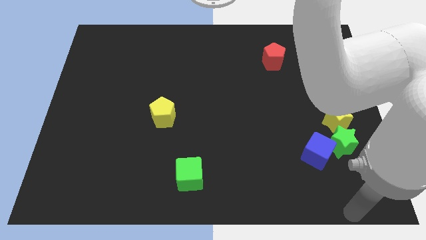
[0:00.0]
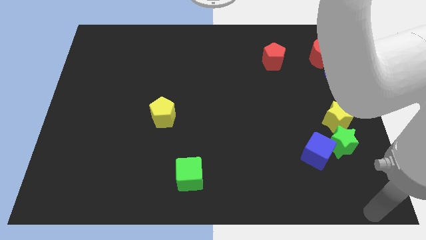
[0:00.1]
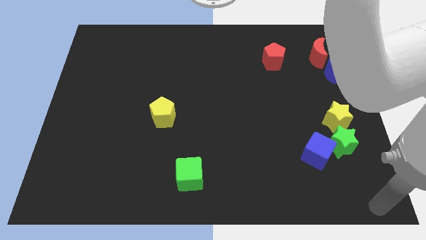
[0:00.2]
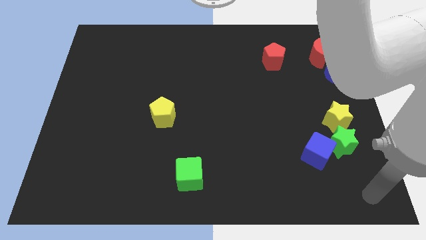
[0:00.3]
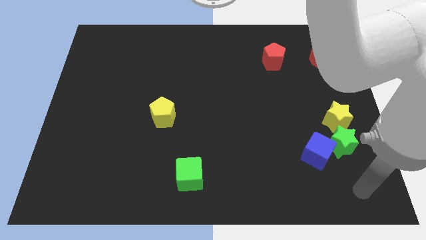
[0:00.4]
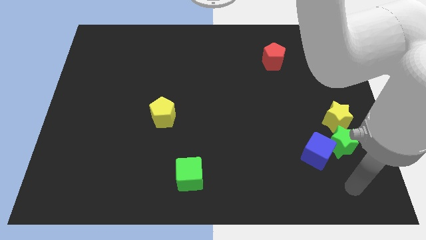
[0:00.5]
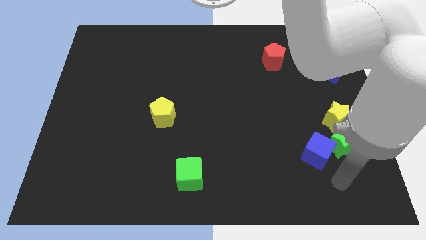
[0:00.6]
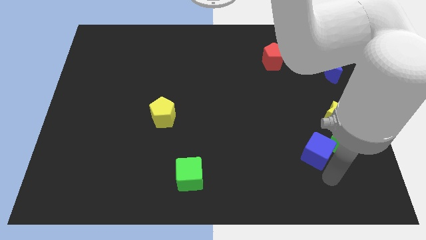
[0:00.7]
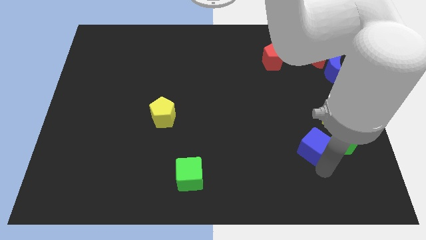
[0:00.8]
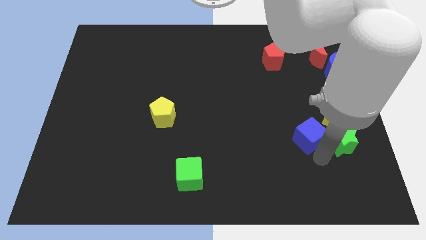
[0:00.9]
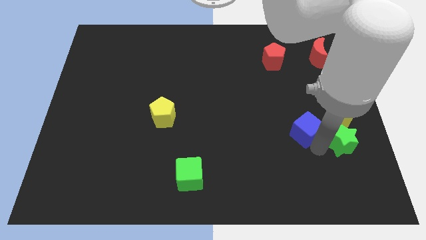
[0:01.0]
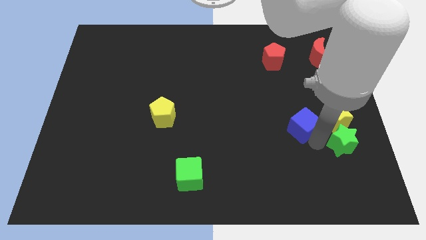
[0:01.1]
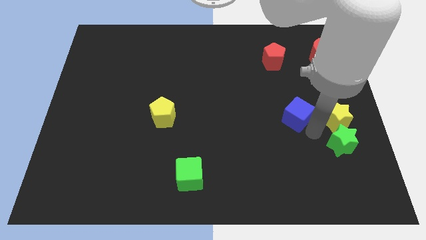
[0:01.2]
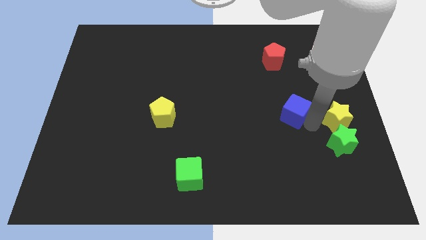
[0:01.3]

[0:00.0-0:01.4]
place the blue cube to the center

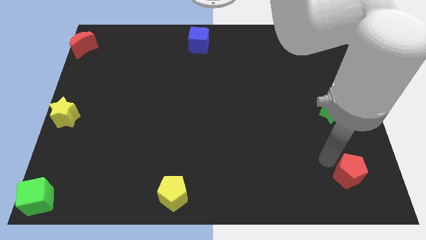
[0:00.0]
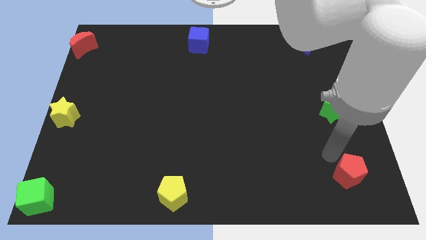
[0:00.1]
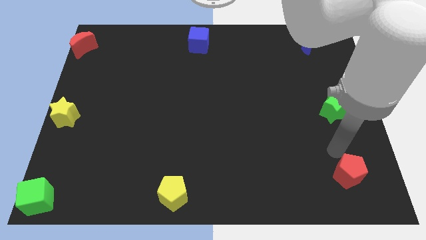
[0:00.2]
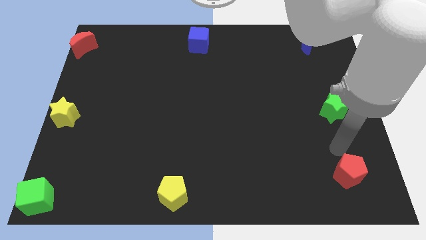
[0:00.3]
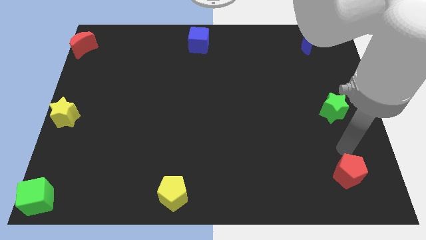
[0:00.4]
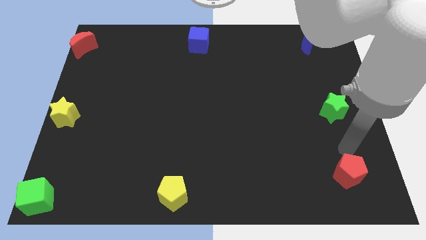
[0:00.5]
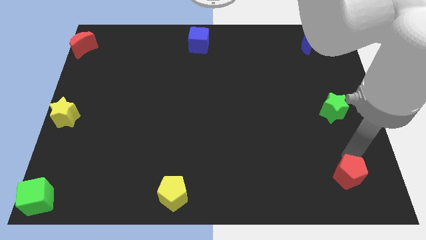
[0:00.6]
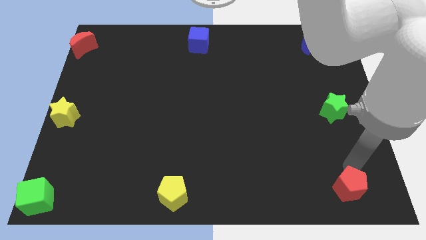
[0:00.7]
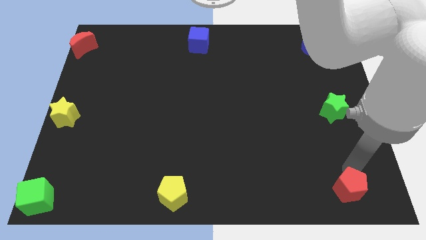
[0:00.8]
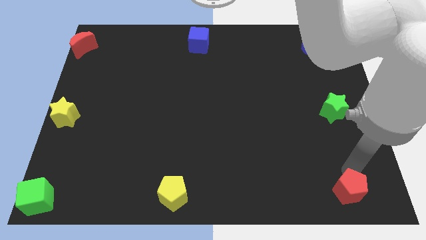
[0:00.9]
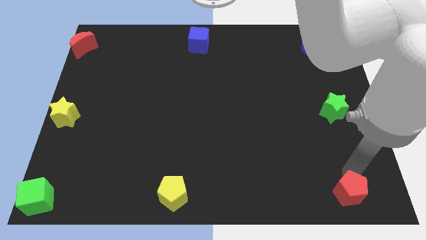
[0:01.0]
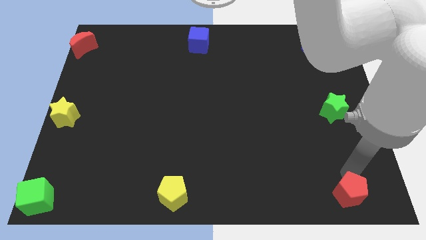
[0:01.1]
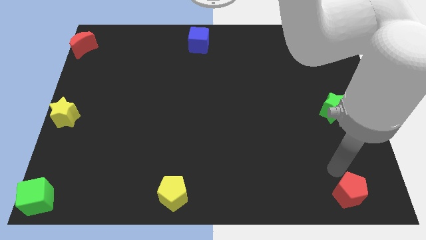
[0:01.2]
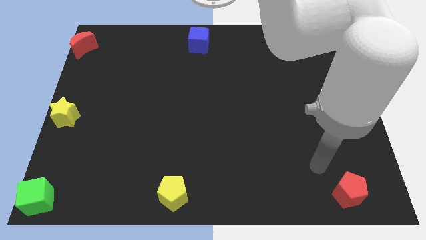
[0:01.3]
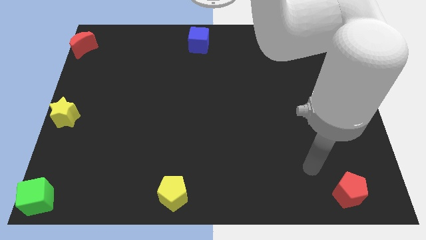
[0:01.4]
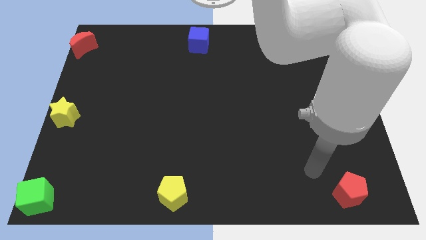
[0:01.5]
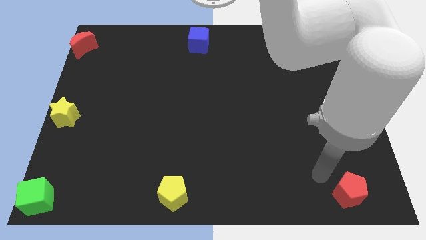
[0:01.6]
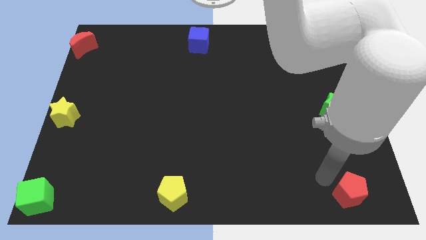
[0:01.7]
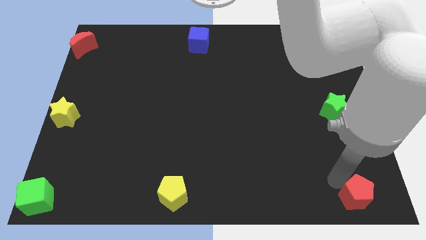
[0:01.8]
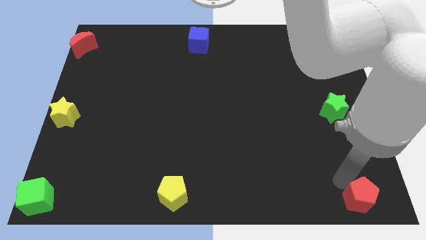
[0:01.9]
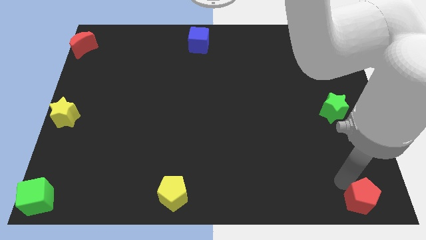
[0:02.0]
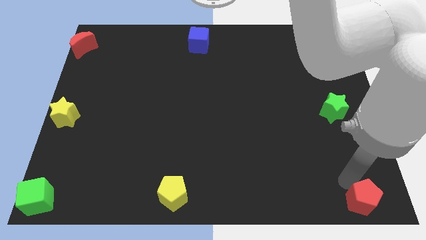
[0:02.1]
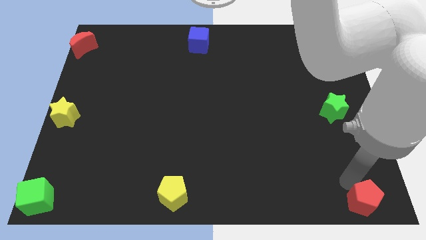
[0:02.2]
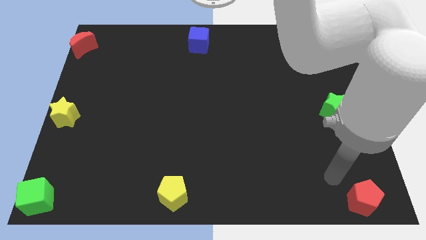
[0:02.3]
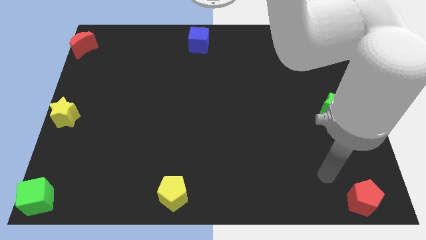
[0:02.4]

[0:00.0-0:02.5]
move the red pentagon bottom right of the board

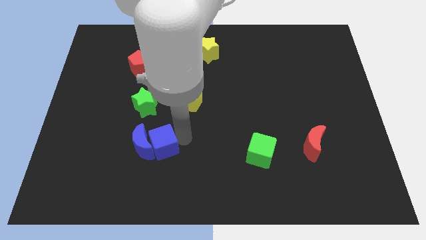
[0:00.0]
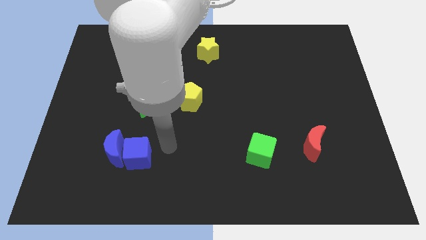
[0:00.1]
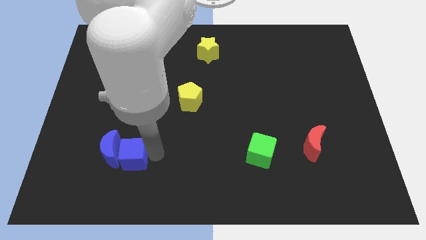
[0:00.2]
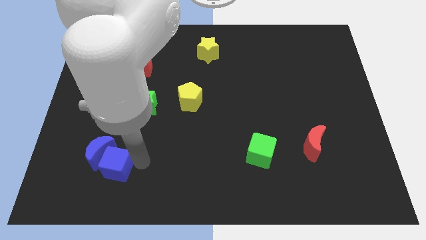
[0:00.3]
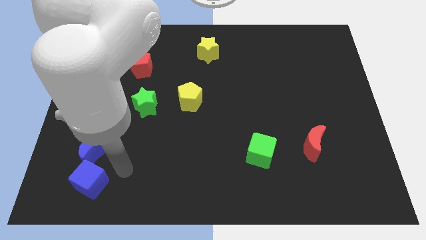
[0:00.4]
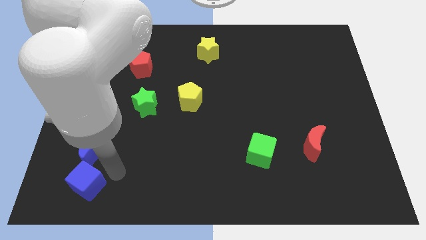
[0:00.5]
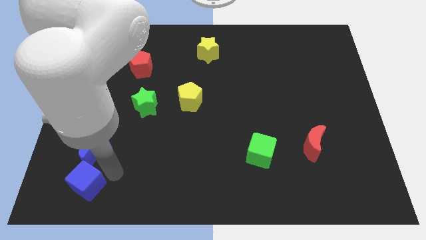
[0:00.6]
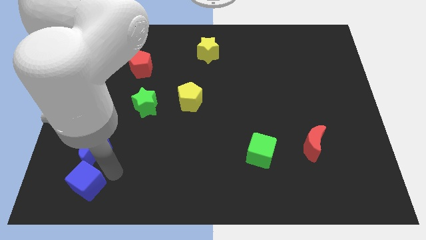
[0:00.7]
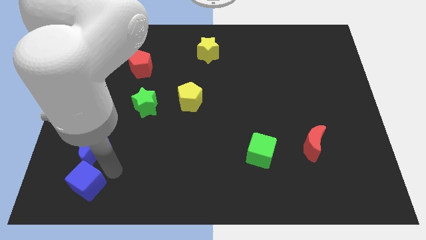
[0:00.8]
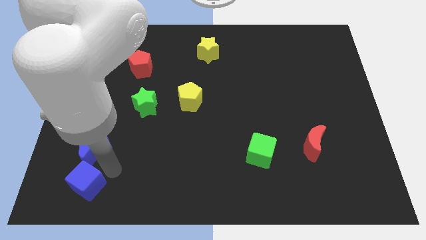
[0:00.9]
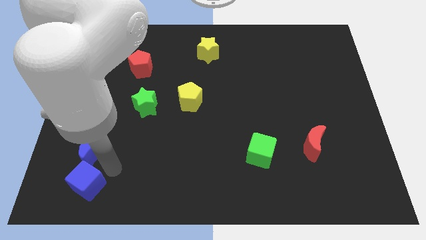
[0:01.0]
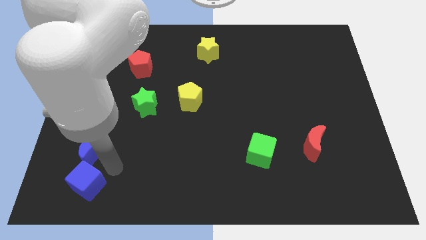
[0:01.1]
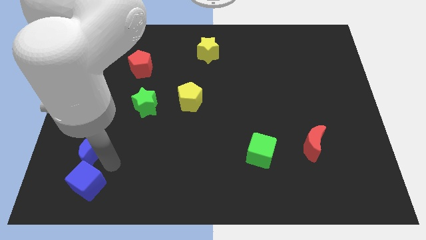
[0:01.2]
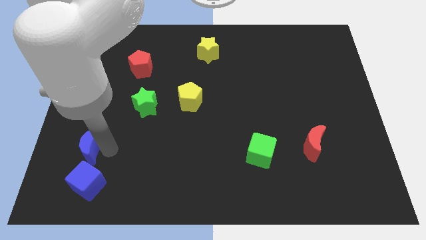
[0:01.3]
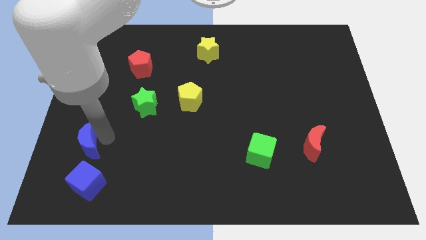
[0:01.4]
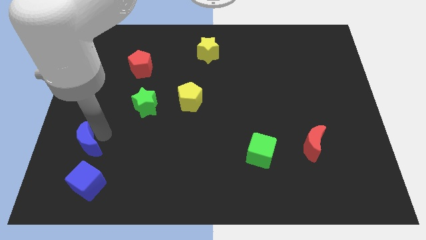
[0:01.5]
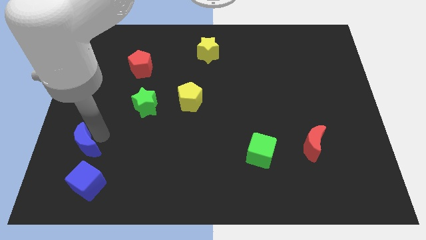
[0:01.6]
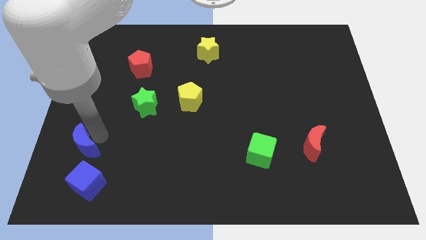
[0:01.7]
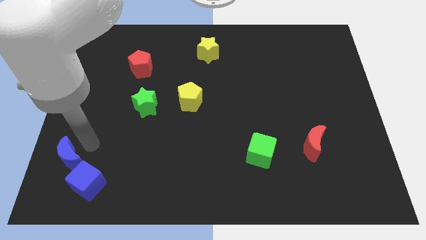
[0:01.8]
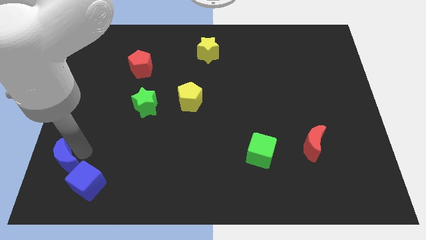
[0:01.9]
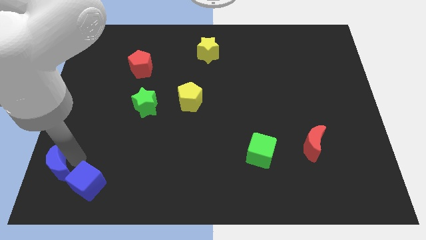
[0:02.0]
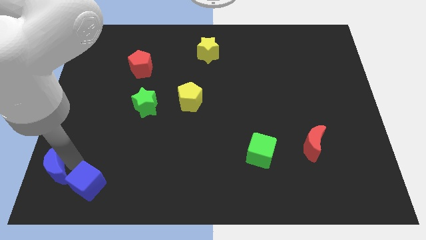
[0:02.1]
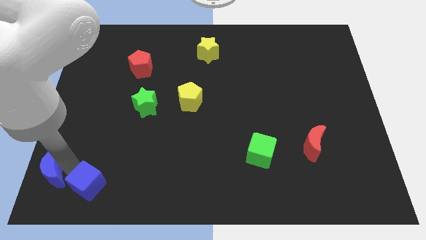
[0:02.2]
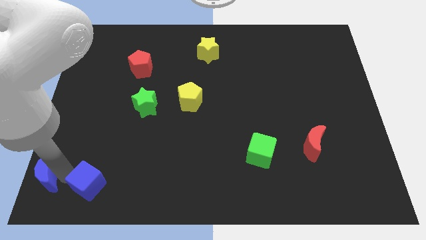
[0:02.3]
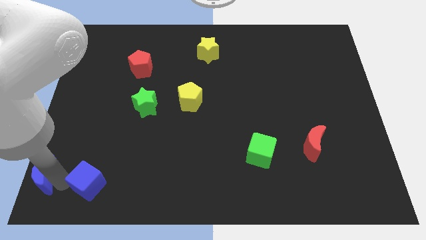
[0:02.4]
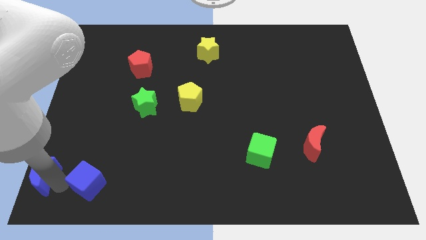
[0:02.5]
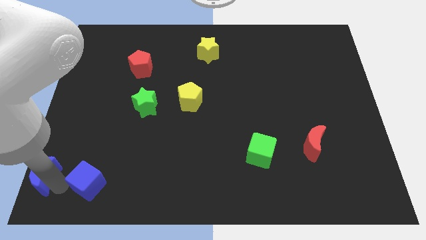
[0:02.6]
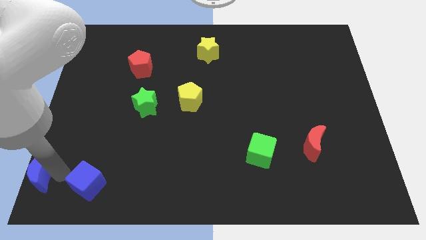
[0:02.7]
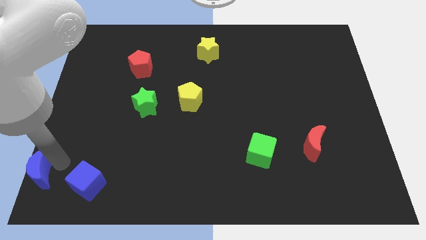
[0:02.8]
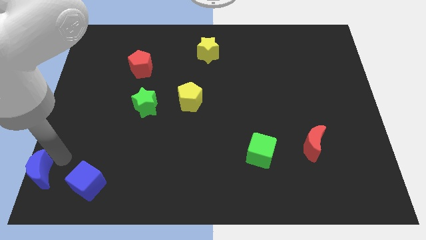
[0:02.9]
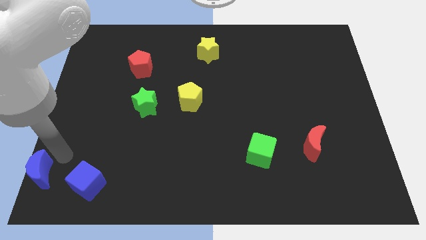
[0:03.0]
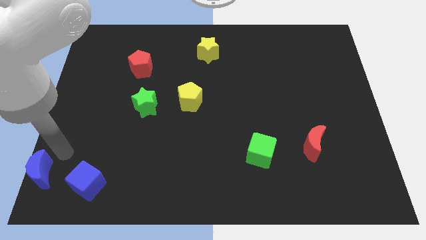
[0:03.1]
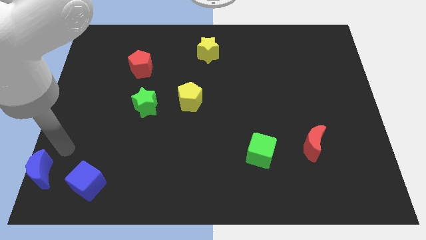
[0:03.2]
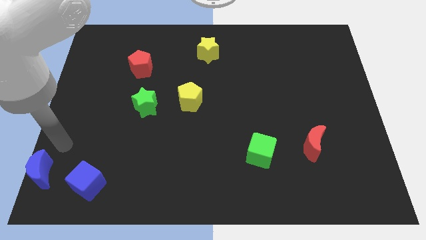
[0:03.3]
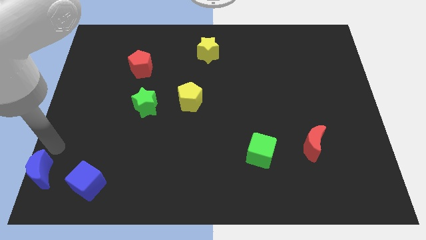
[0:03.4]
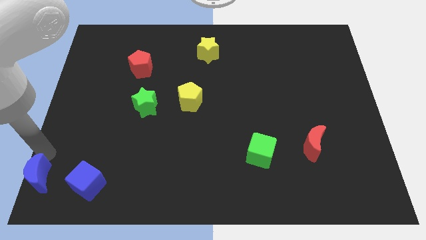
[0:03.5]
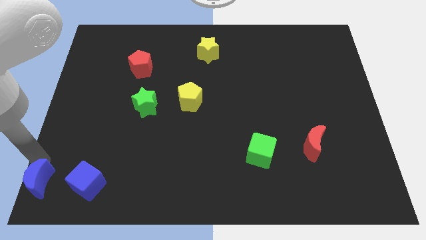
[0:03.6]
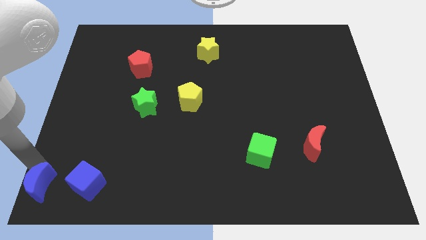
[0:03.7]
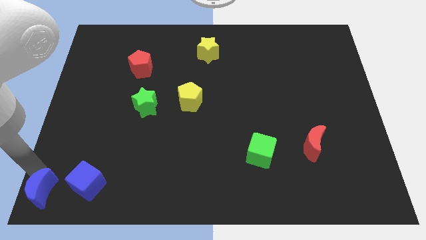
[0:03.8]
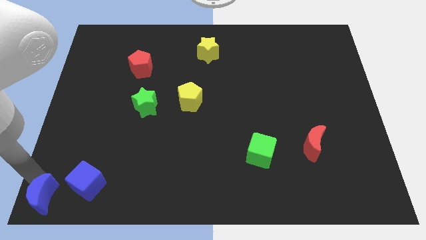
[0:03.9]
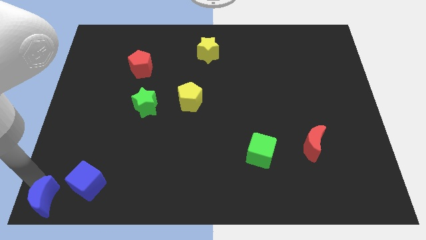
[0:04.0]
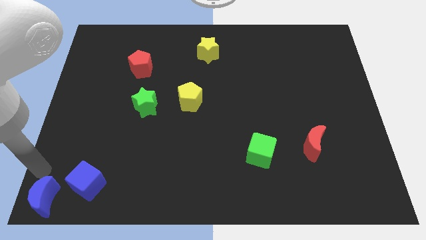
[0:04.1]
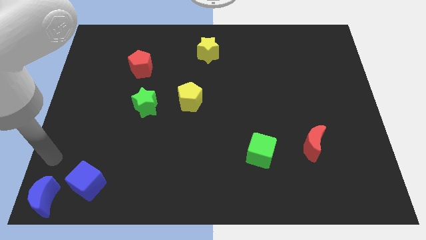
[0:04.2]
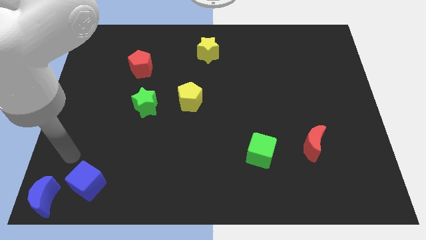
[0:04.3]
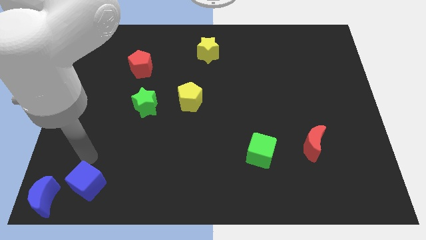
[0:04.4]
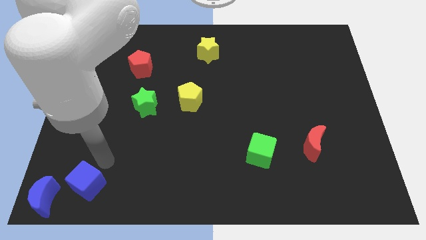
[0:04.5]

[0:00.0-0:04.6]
place the blue crescent to the left bottom

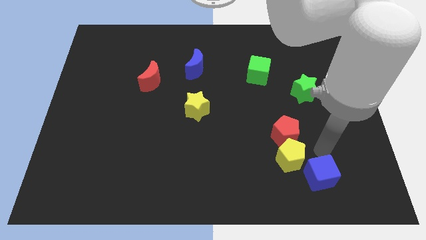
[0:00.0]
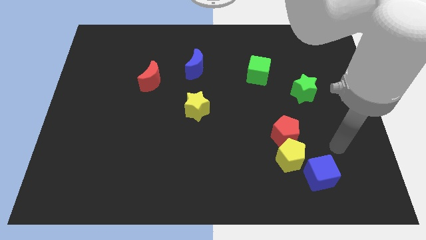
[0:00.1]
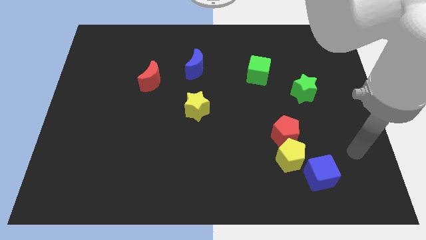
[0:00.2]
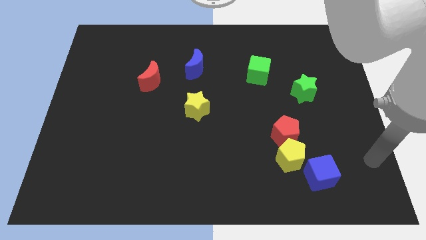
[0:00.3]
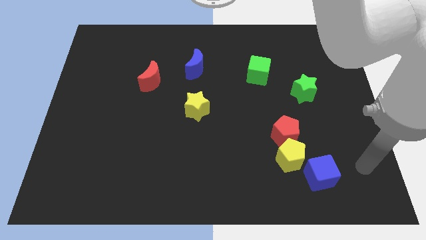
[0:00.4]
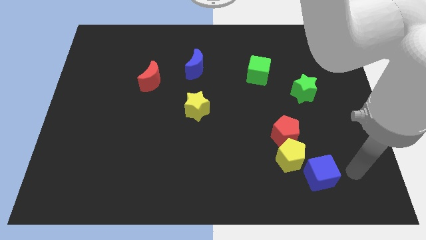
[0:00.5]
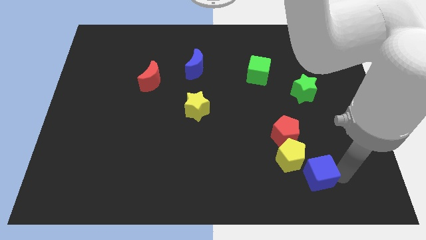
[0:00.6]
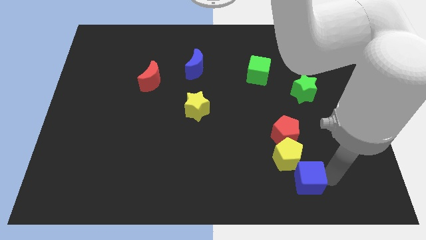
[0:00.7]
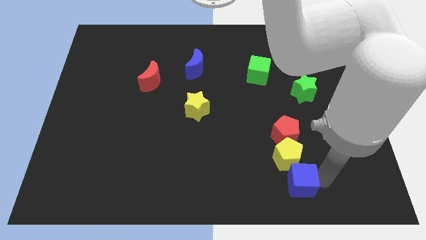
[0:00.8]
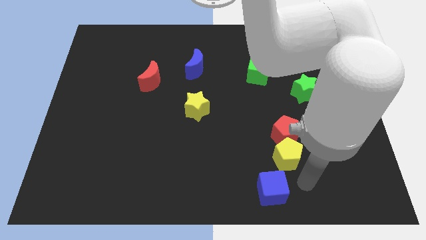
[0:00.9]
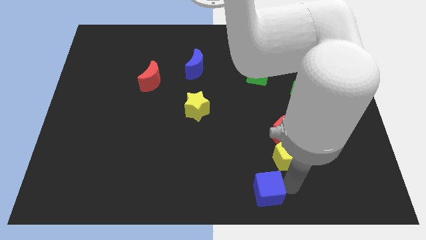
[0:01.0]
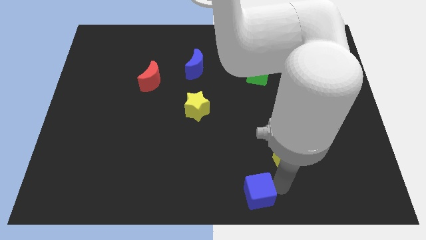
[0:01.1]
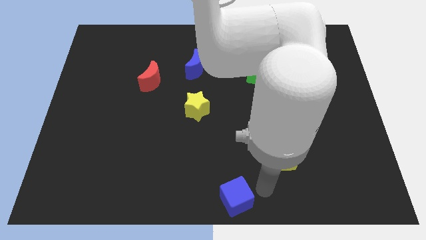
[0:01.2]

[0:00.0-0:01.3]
move the blue cube away from the yellow pentagon
